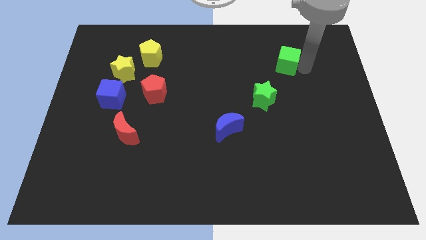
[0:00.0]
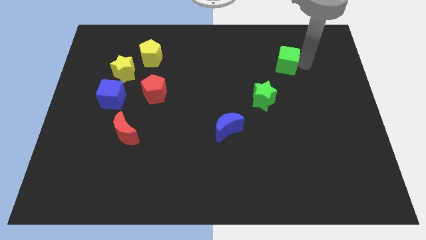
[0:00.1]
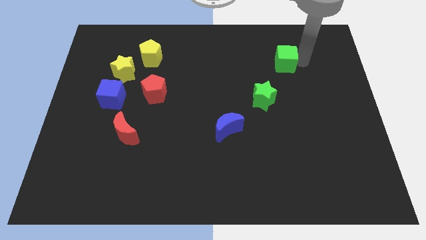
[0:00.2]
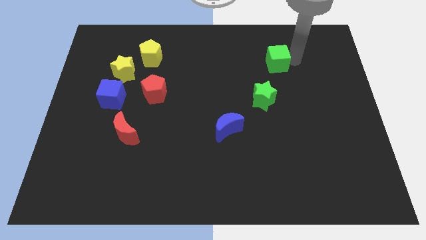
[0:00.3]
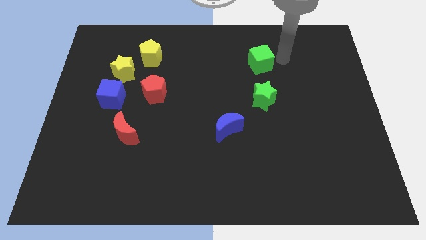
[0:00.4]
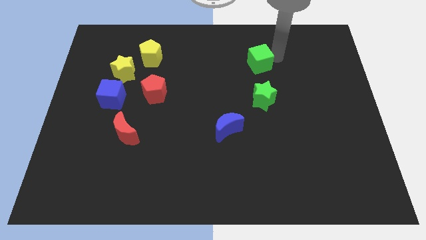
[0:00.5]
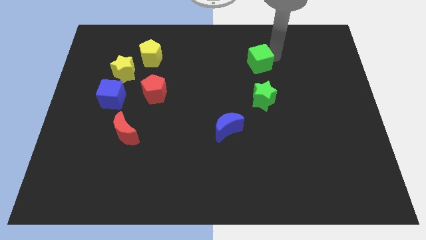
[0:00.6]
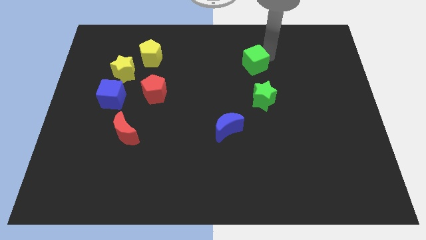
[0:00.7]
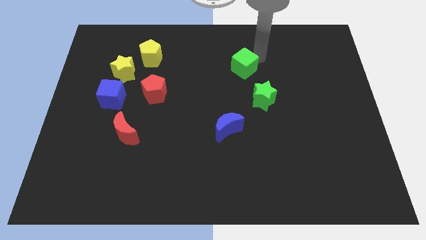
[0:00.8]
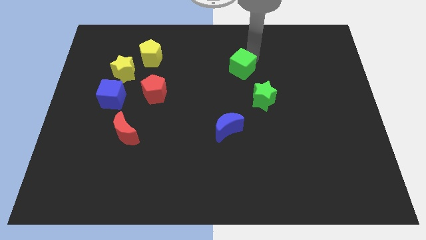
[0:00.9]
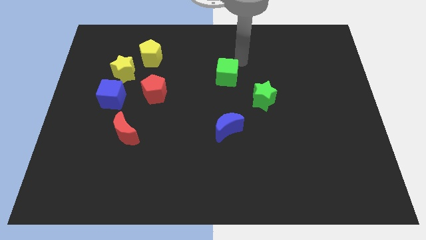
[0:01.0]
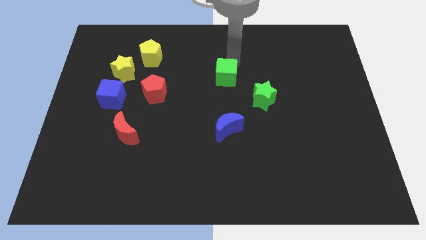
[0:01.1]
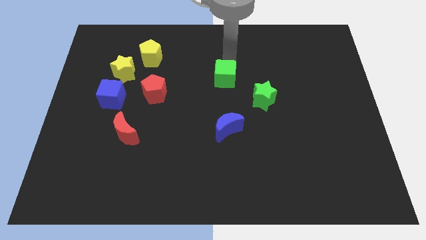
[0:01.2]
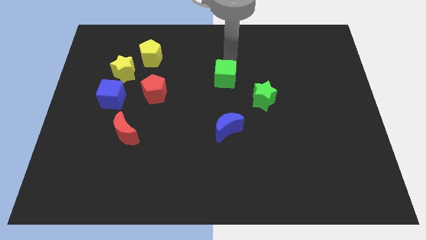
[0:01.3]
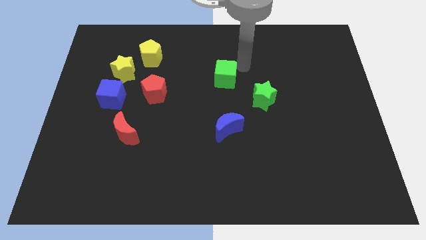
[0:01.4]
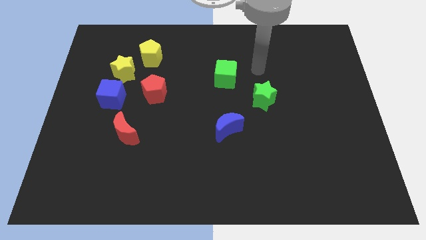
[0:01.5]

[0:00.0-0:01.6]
place the green cube above the blue moon

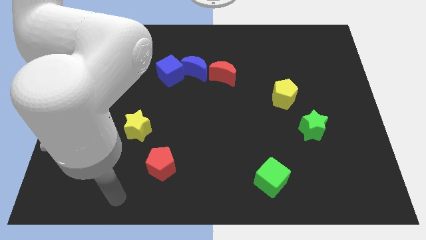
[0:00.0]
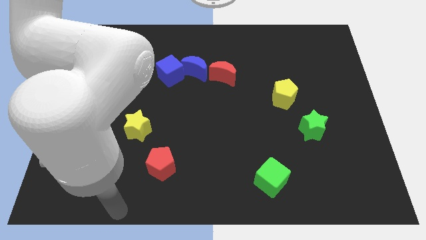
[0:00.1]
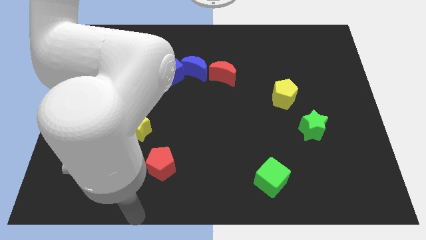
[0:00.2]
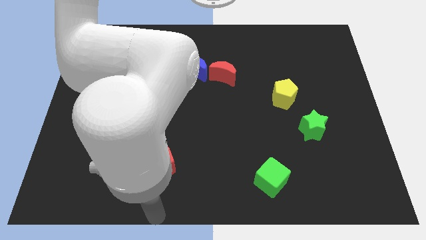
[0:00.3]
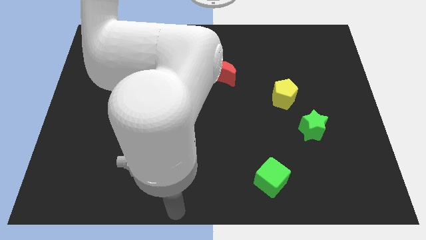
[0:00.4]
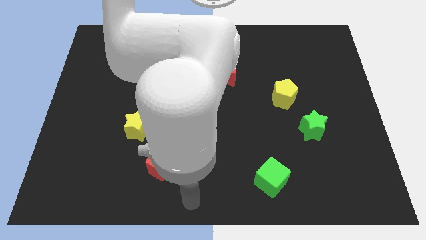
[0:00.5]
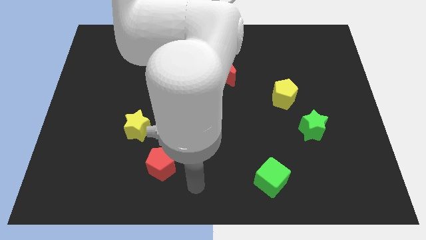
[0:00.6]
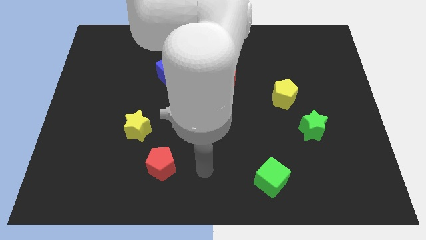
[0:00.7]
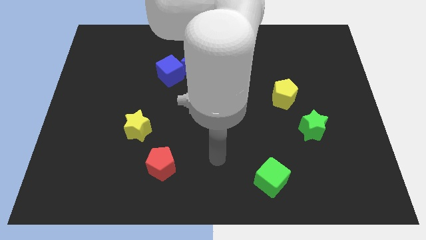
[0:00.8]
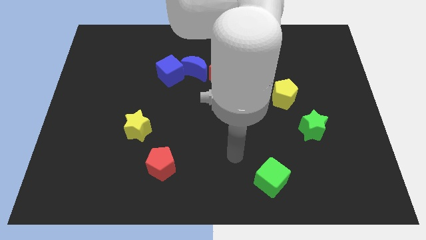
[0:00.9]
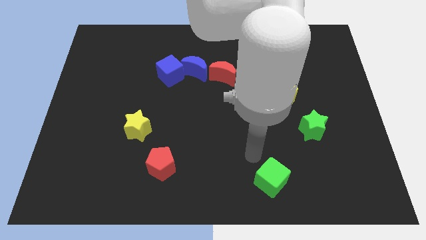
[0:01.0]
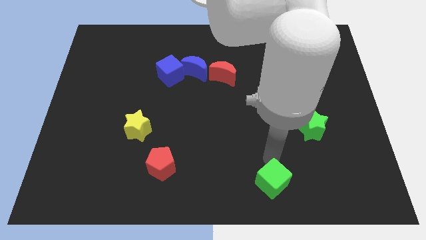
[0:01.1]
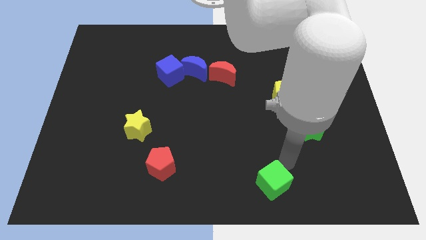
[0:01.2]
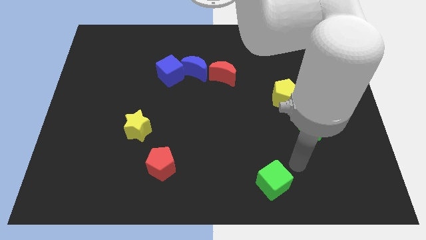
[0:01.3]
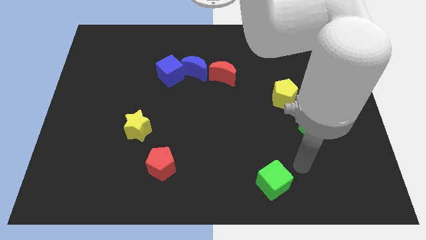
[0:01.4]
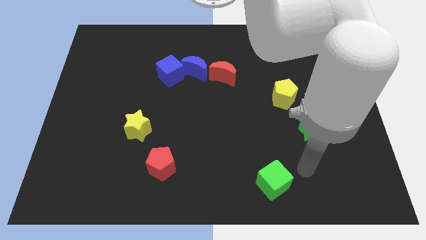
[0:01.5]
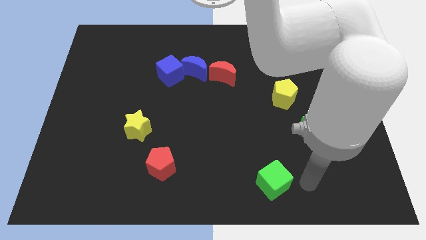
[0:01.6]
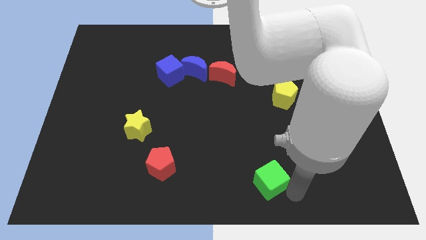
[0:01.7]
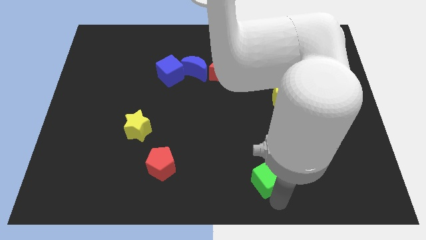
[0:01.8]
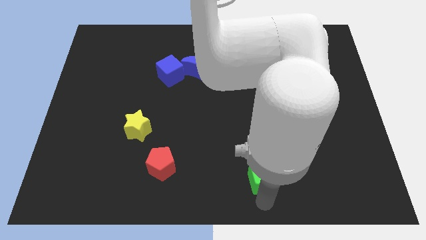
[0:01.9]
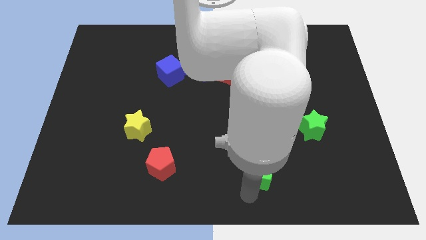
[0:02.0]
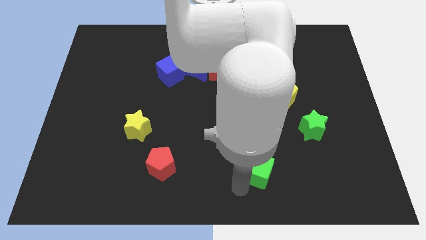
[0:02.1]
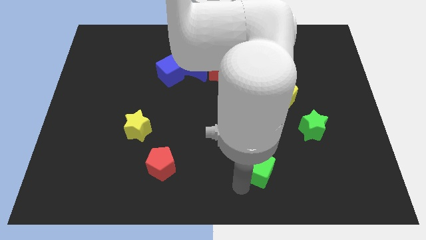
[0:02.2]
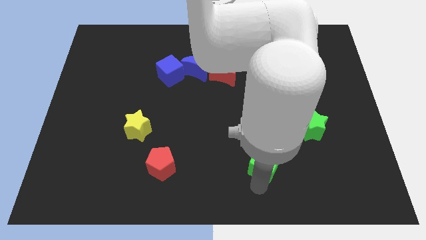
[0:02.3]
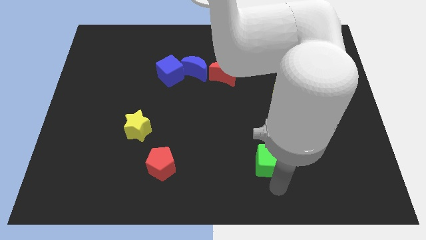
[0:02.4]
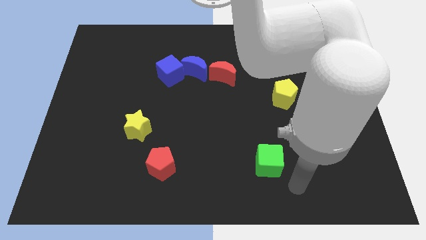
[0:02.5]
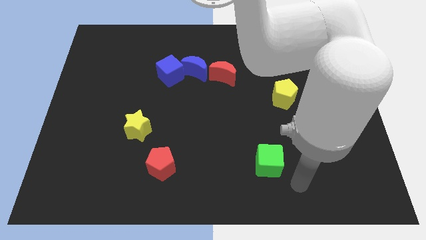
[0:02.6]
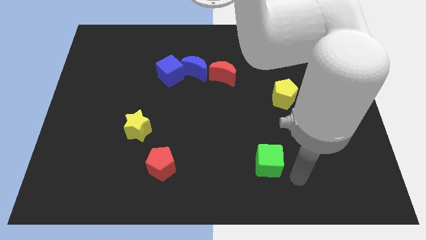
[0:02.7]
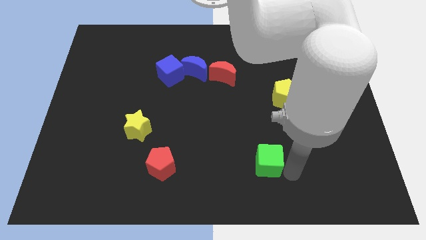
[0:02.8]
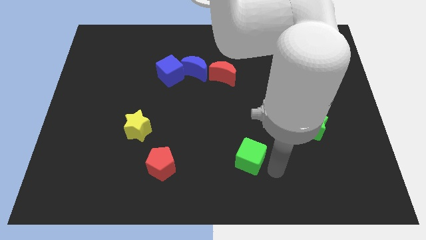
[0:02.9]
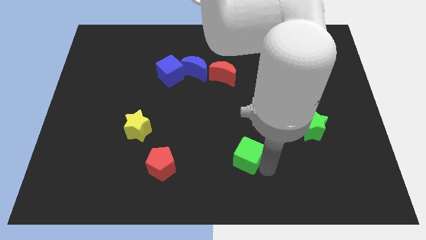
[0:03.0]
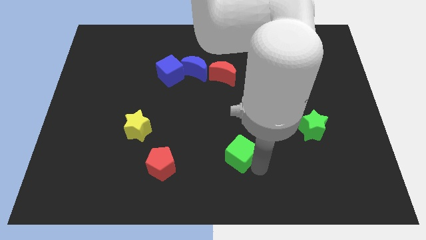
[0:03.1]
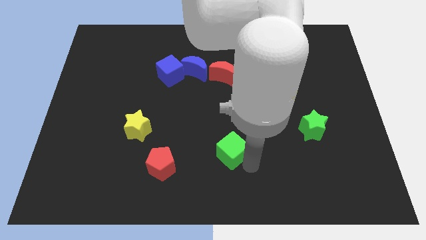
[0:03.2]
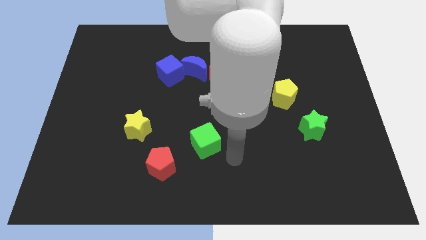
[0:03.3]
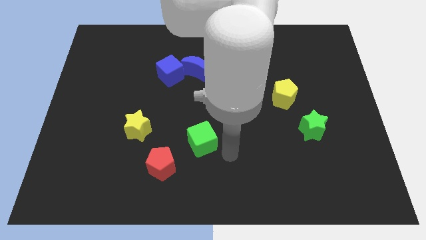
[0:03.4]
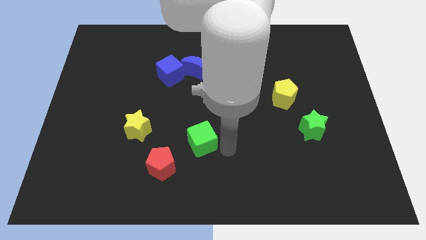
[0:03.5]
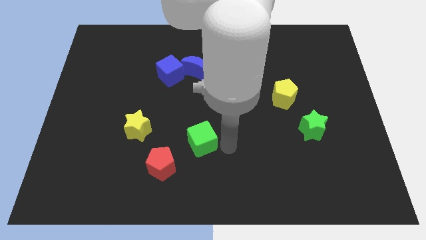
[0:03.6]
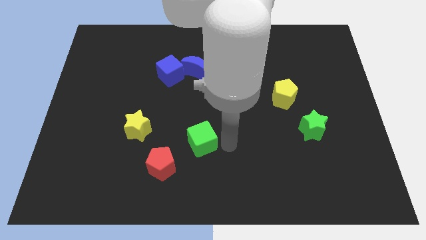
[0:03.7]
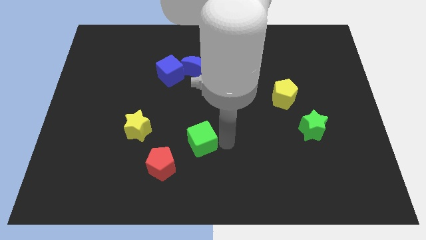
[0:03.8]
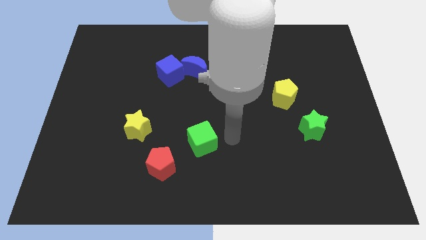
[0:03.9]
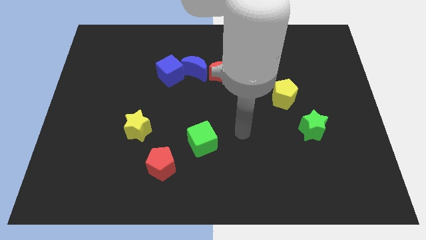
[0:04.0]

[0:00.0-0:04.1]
place the green cube diagonally in between the red pentagon and yellow pentagon

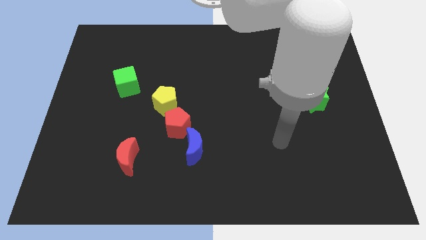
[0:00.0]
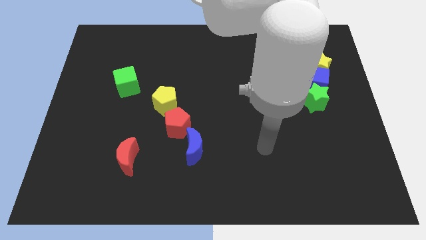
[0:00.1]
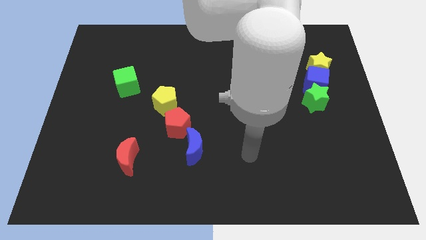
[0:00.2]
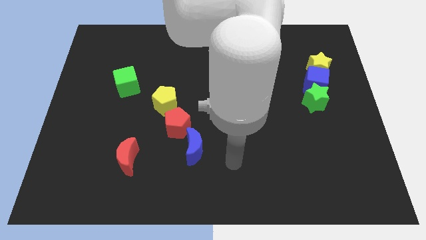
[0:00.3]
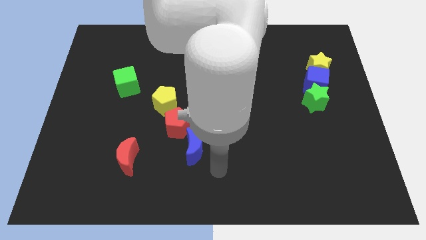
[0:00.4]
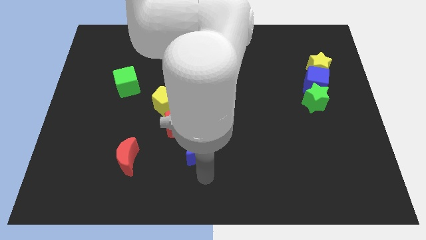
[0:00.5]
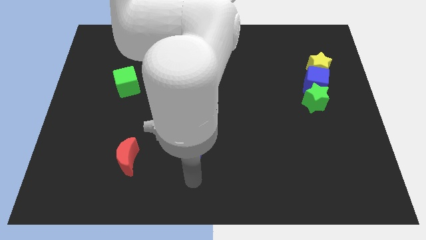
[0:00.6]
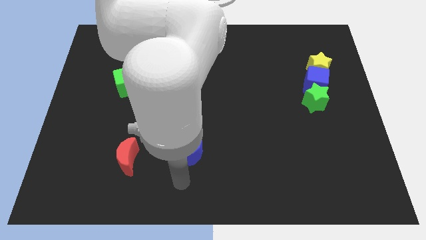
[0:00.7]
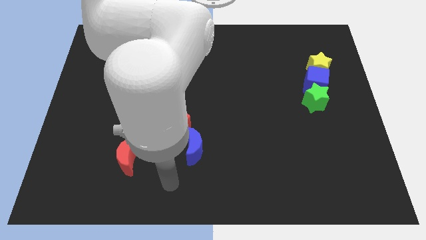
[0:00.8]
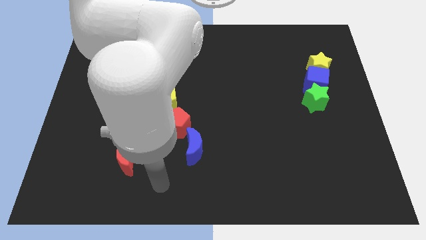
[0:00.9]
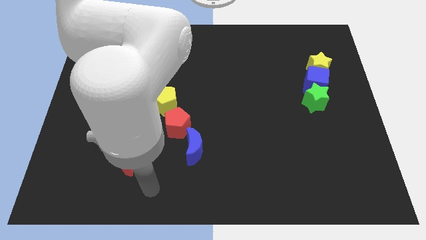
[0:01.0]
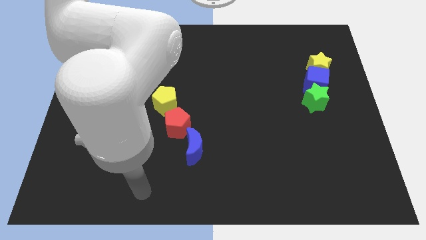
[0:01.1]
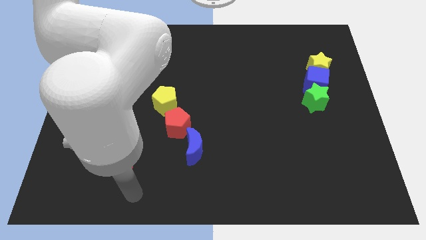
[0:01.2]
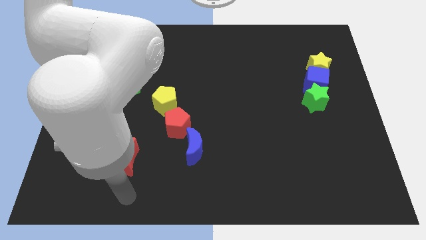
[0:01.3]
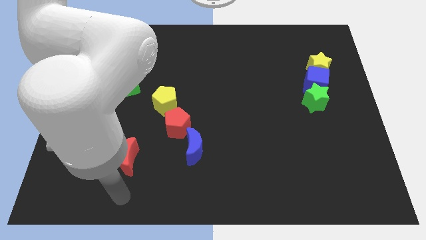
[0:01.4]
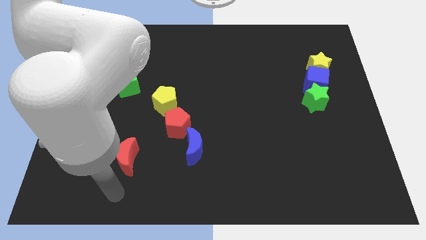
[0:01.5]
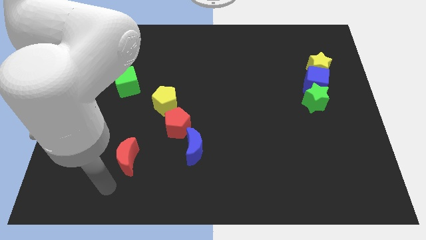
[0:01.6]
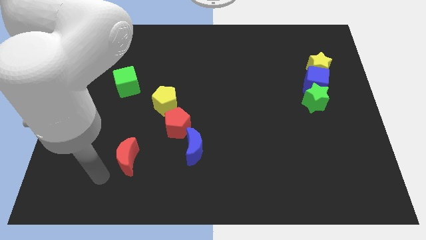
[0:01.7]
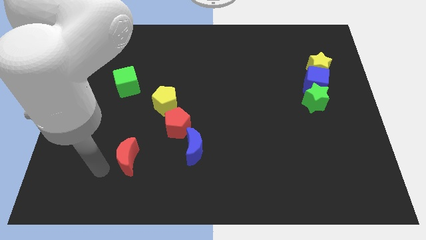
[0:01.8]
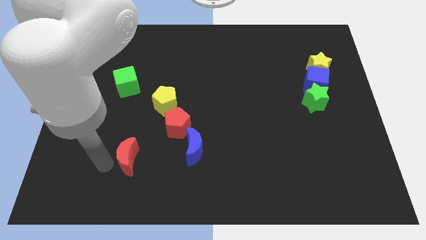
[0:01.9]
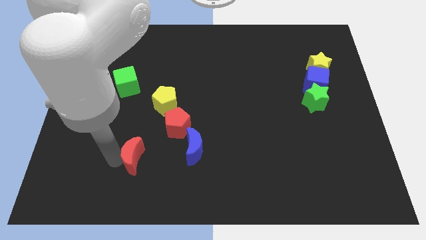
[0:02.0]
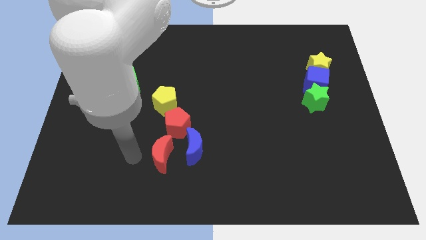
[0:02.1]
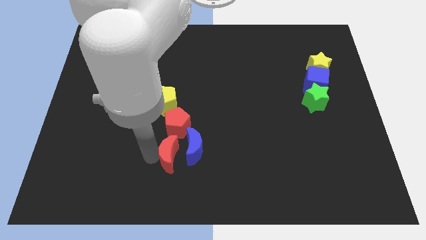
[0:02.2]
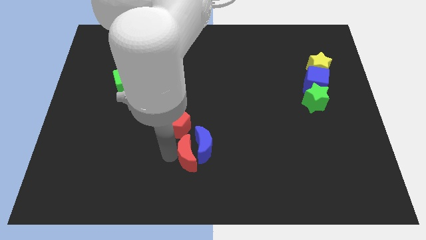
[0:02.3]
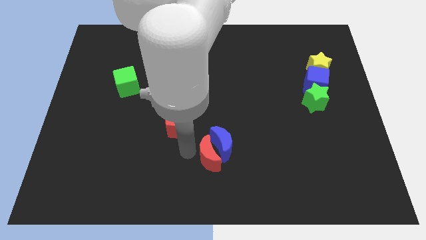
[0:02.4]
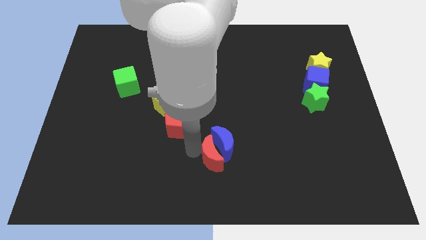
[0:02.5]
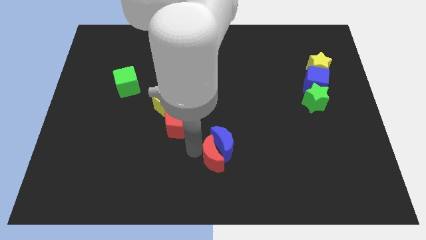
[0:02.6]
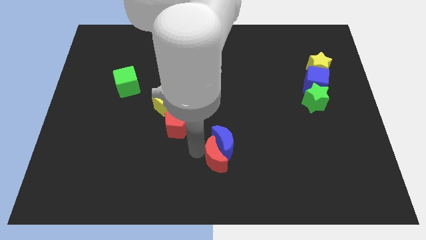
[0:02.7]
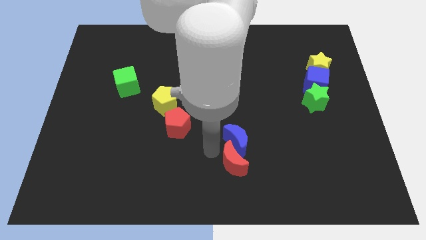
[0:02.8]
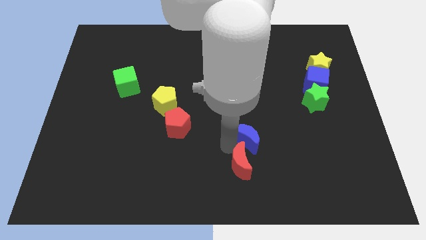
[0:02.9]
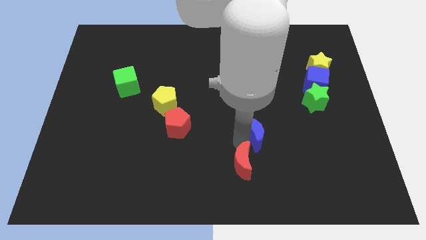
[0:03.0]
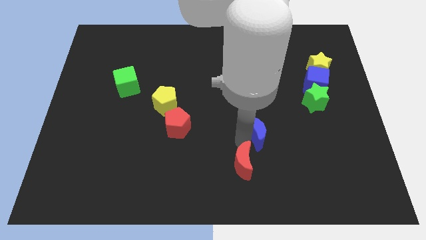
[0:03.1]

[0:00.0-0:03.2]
push the red crescent into the blue crescent

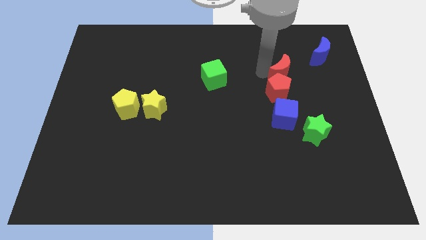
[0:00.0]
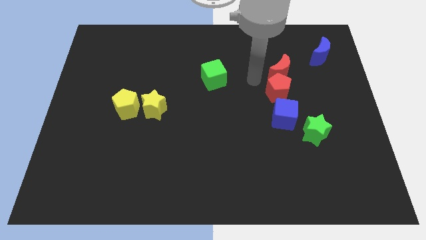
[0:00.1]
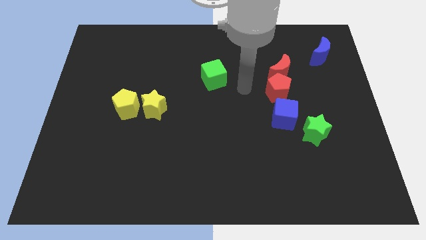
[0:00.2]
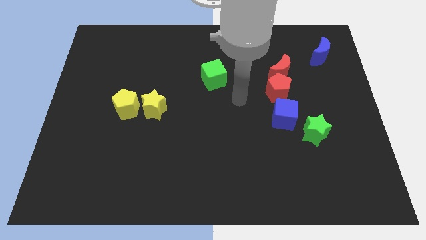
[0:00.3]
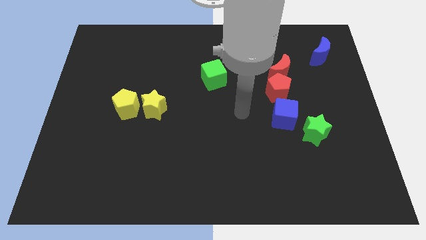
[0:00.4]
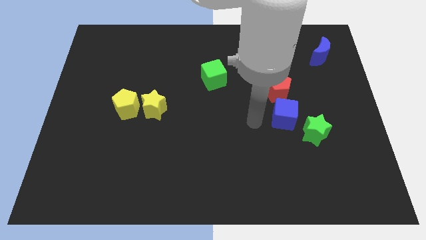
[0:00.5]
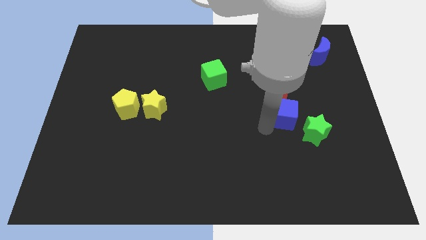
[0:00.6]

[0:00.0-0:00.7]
move your arm away from the red moon
